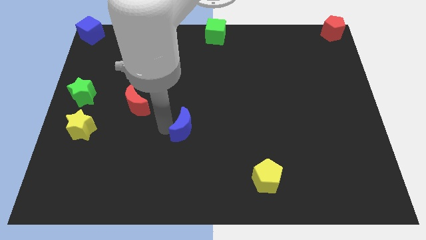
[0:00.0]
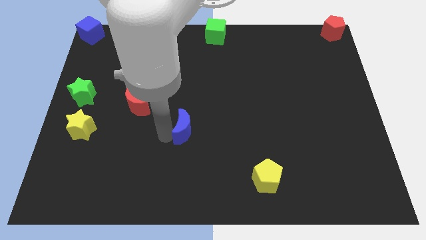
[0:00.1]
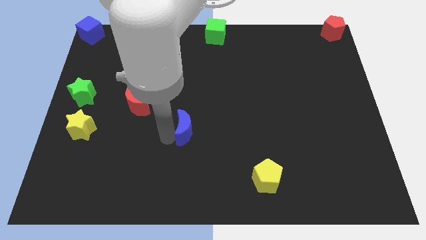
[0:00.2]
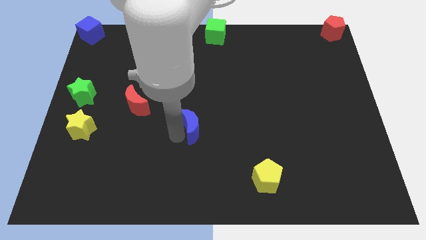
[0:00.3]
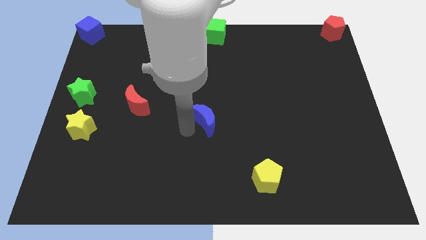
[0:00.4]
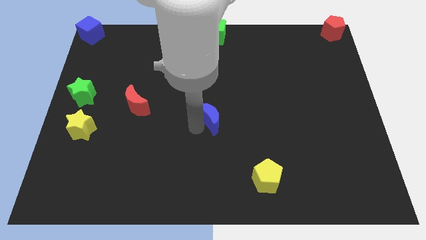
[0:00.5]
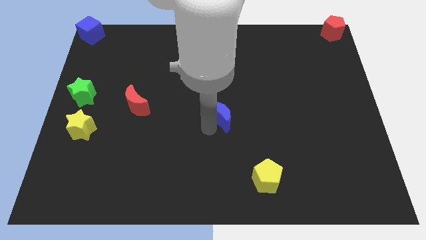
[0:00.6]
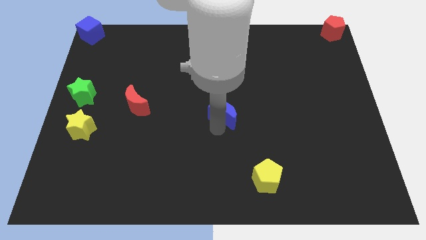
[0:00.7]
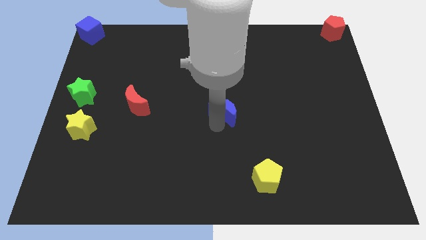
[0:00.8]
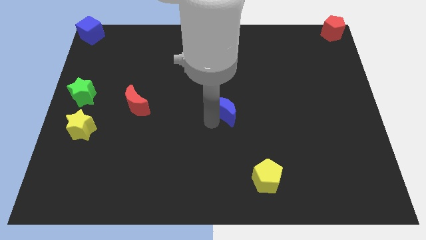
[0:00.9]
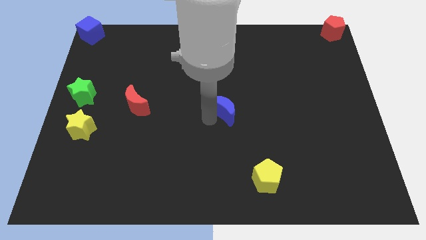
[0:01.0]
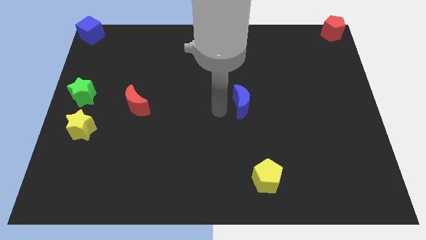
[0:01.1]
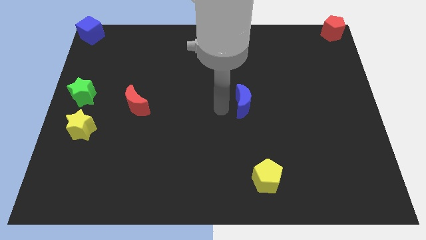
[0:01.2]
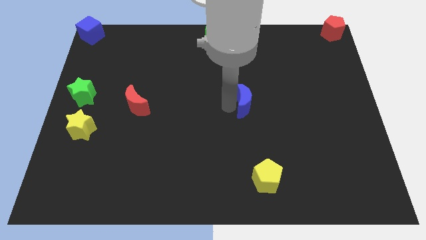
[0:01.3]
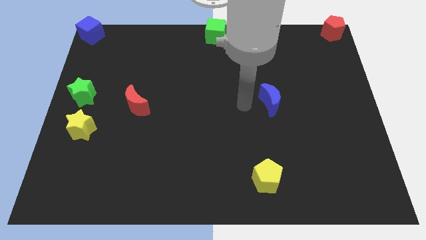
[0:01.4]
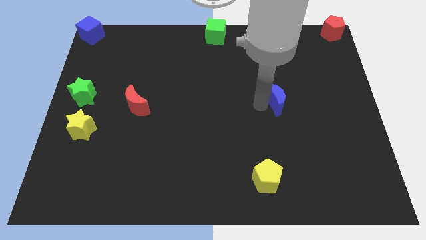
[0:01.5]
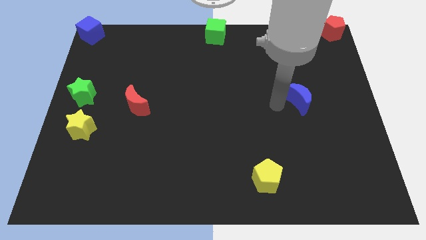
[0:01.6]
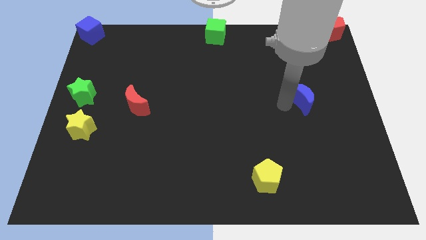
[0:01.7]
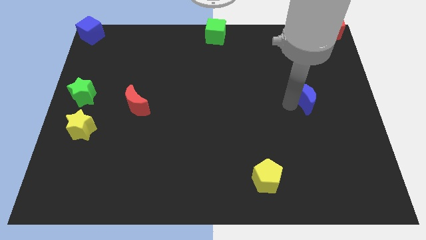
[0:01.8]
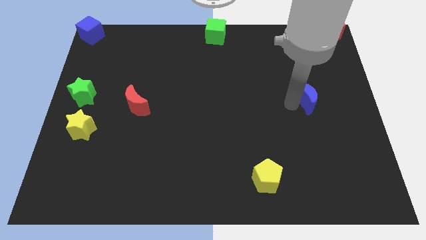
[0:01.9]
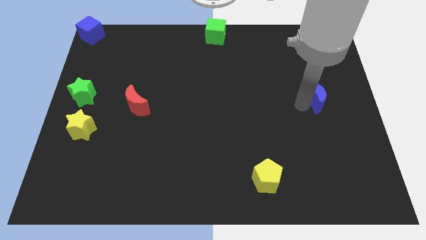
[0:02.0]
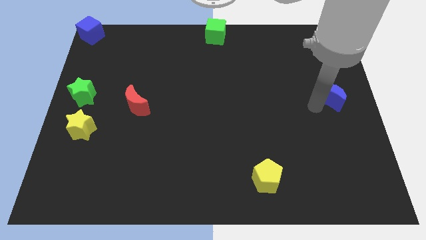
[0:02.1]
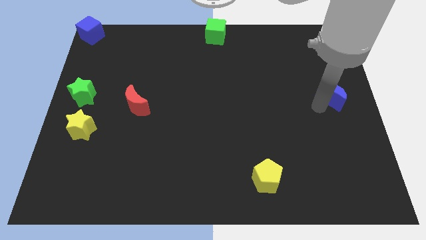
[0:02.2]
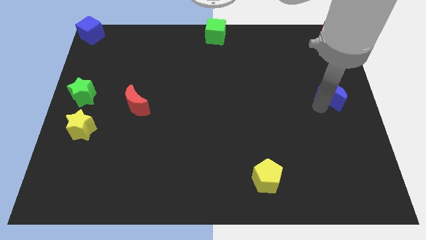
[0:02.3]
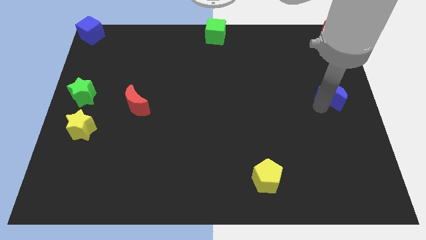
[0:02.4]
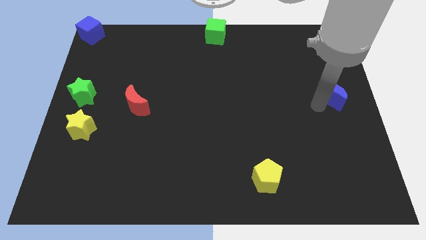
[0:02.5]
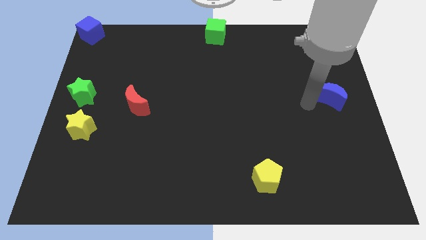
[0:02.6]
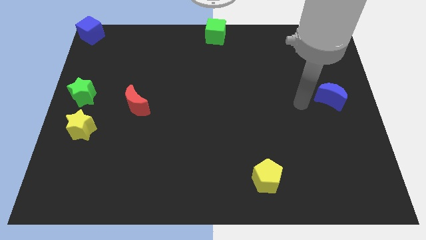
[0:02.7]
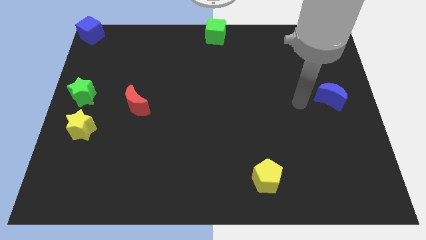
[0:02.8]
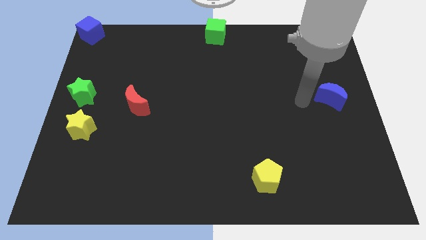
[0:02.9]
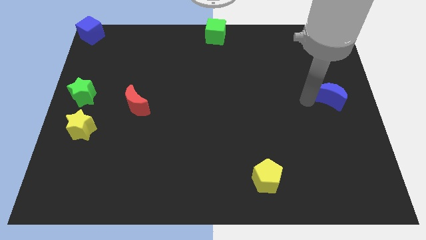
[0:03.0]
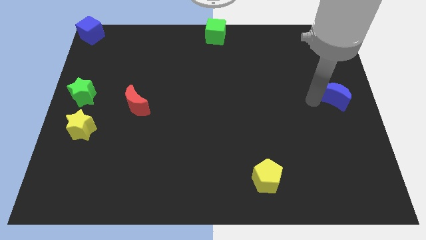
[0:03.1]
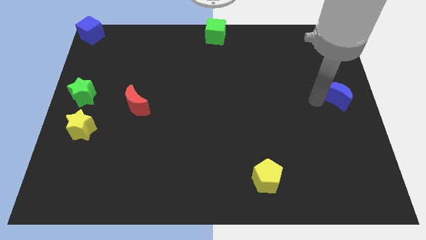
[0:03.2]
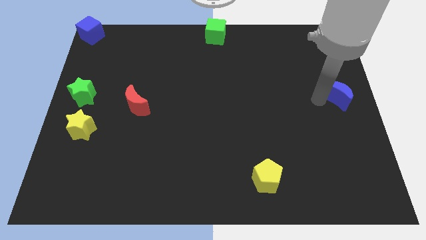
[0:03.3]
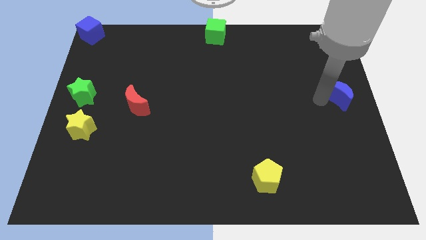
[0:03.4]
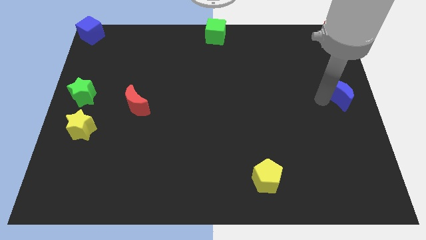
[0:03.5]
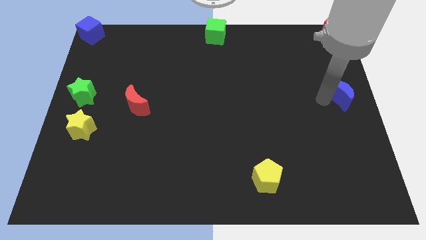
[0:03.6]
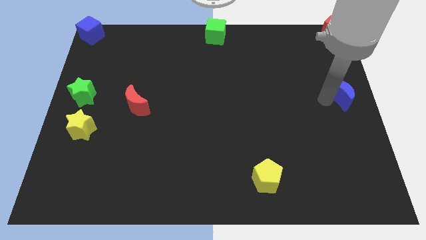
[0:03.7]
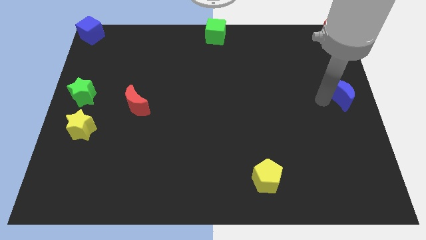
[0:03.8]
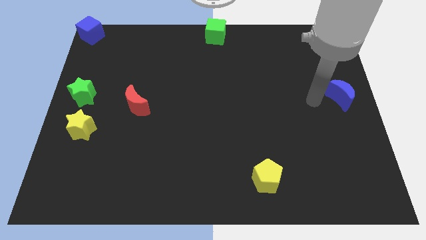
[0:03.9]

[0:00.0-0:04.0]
place the blue moon to the center right

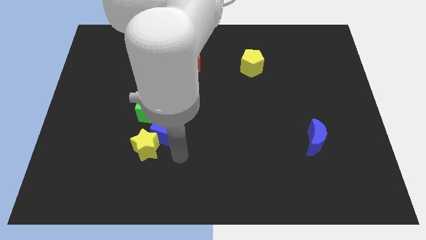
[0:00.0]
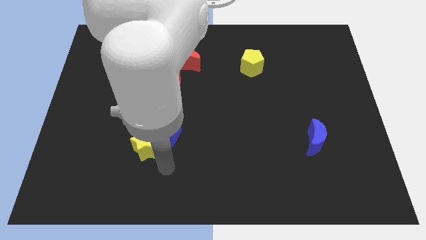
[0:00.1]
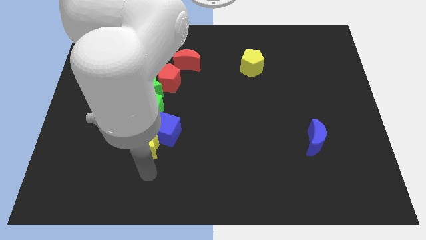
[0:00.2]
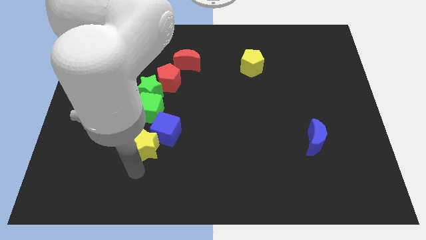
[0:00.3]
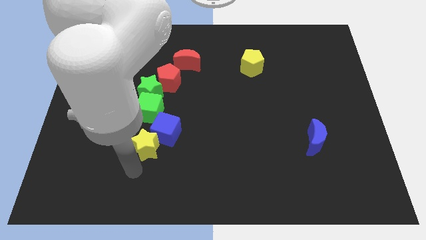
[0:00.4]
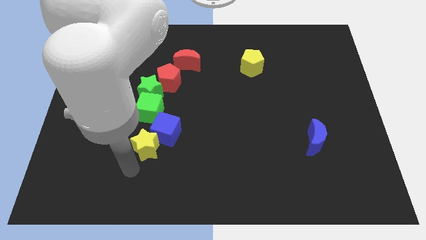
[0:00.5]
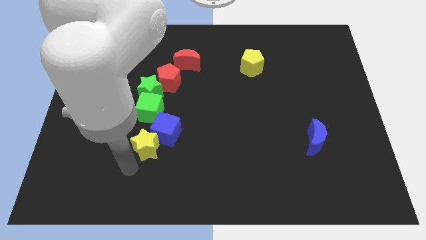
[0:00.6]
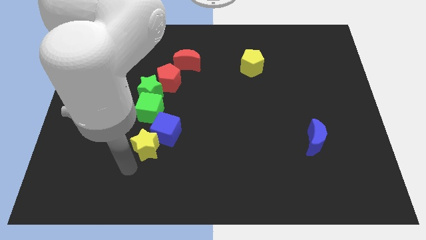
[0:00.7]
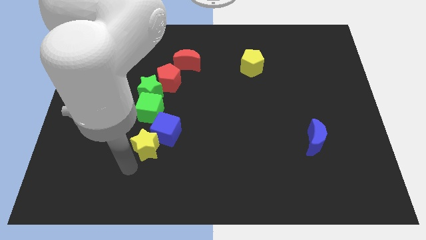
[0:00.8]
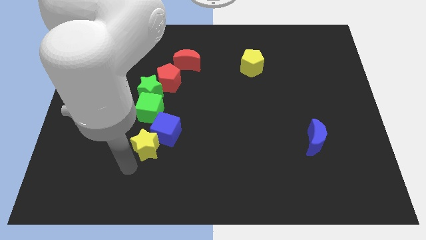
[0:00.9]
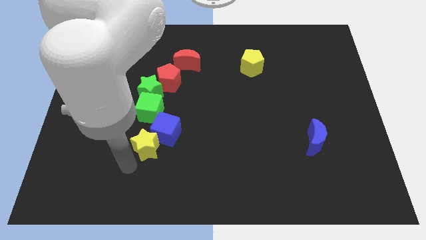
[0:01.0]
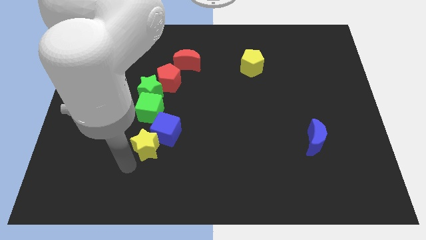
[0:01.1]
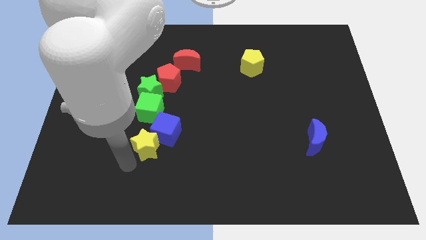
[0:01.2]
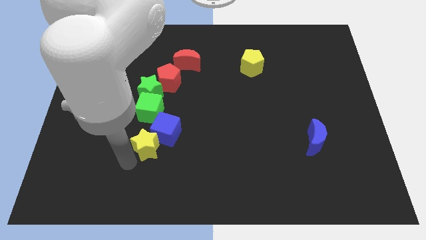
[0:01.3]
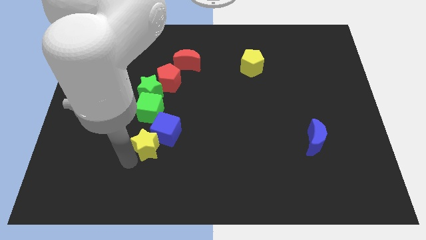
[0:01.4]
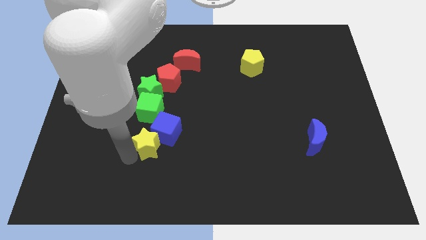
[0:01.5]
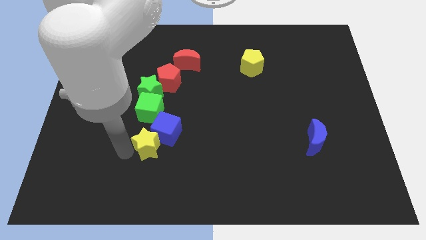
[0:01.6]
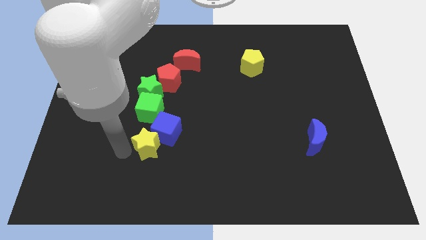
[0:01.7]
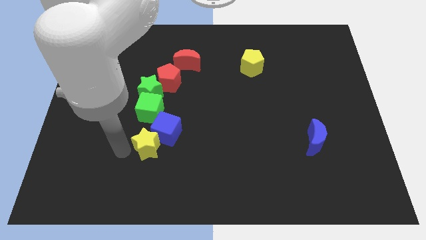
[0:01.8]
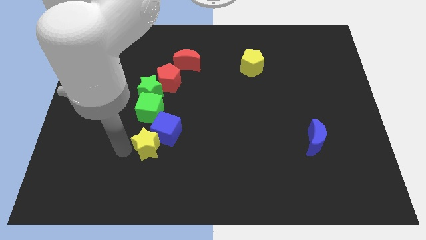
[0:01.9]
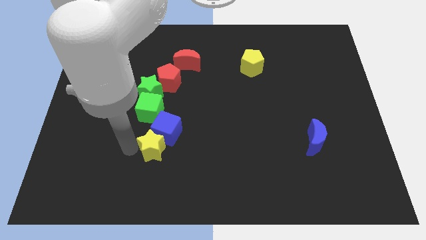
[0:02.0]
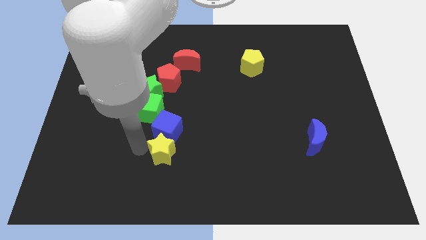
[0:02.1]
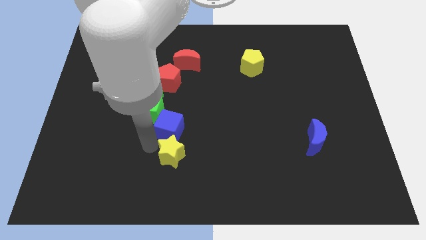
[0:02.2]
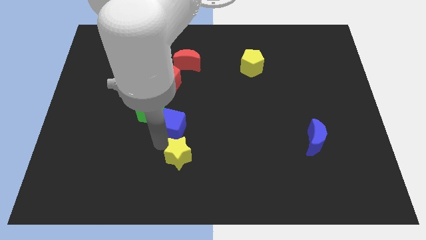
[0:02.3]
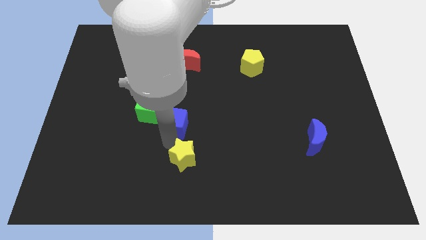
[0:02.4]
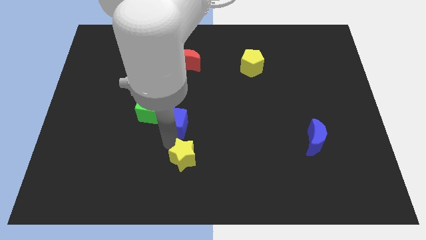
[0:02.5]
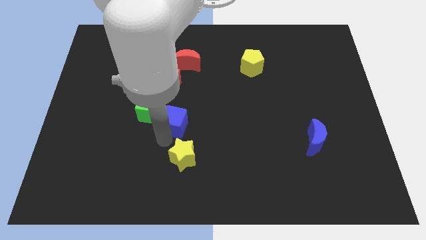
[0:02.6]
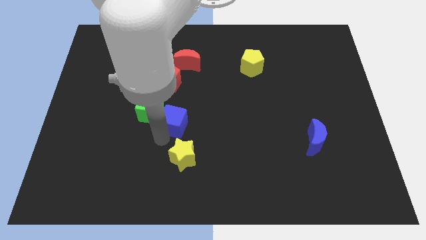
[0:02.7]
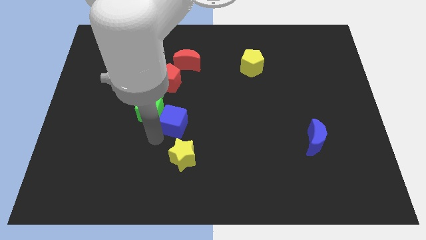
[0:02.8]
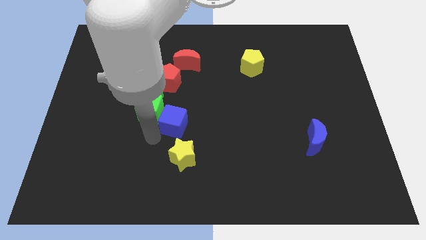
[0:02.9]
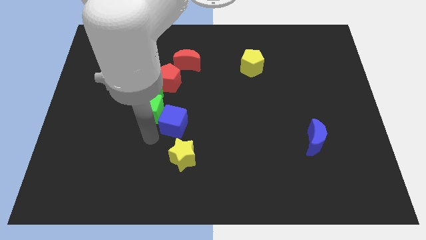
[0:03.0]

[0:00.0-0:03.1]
go and separate the yellow star and blue cube from each other

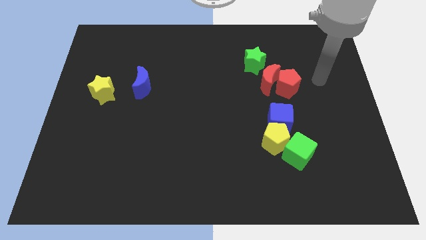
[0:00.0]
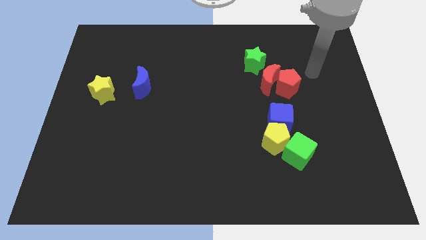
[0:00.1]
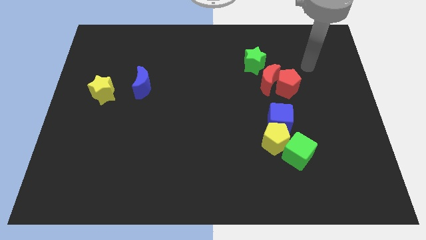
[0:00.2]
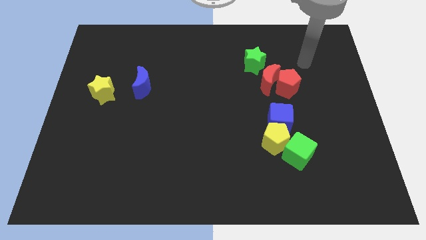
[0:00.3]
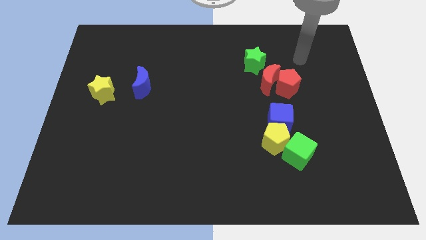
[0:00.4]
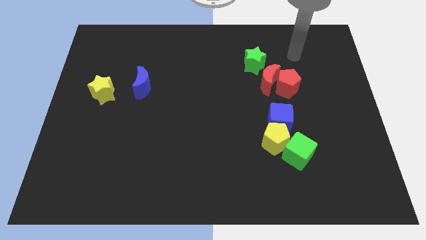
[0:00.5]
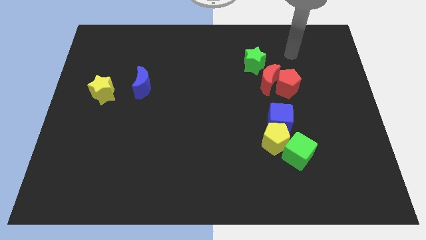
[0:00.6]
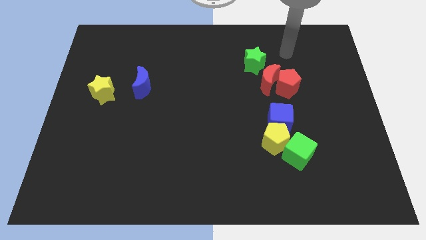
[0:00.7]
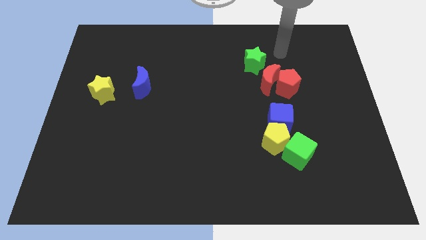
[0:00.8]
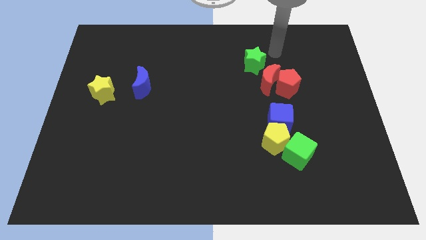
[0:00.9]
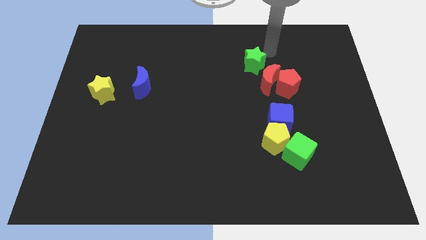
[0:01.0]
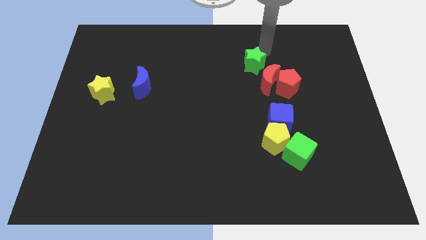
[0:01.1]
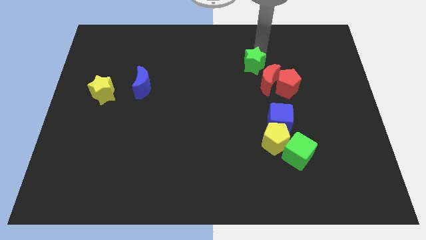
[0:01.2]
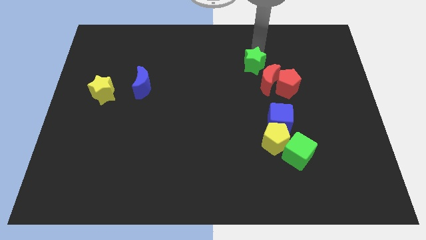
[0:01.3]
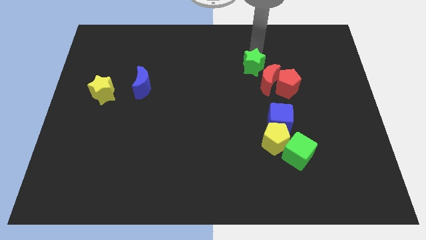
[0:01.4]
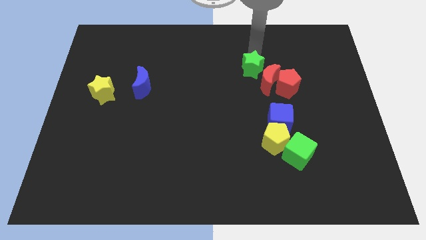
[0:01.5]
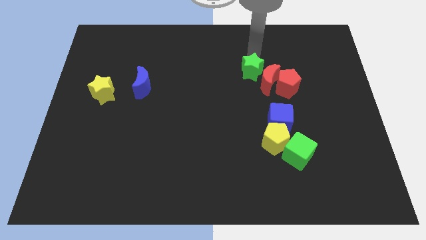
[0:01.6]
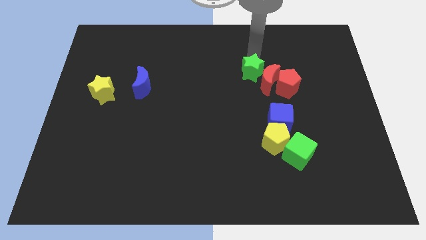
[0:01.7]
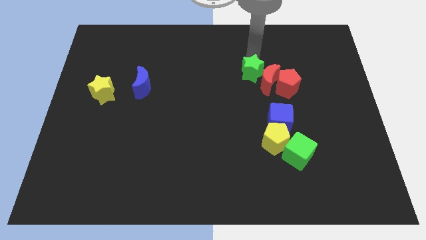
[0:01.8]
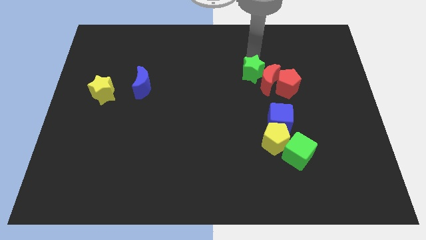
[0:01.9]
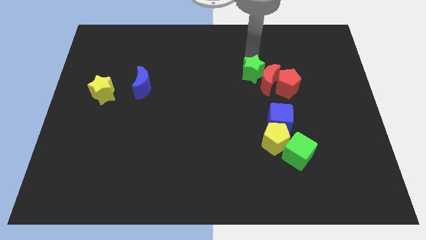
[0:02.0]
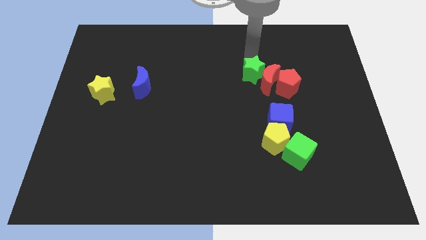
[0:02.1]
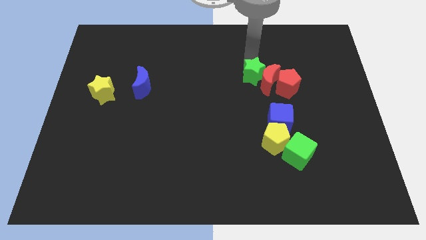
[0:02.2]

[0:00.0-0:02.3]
move the green star left to the red crescent
